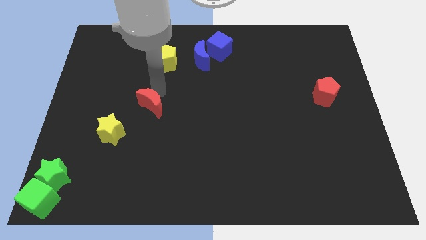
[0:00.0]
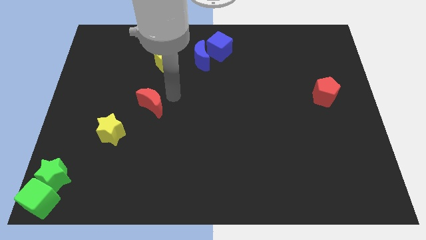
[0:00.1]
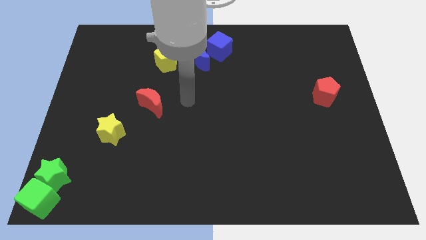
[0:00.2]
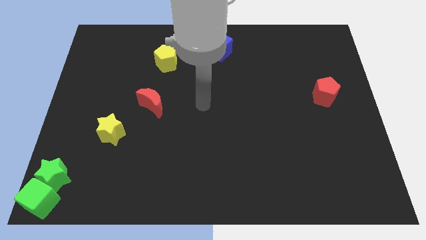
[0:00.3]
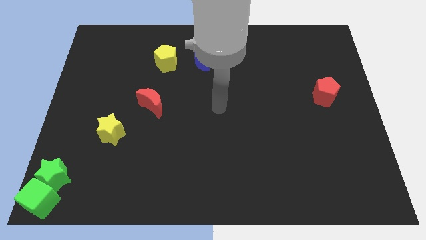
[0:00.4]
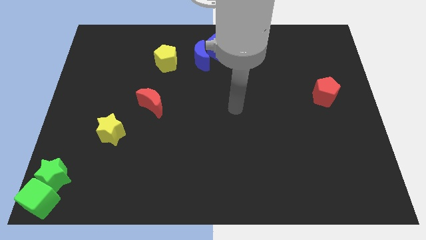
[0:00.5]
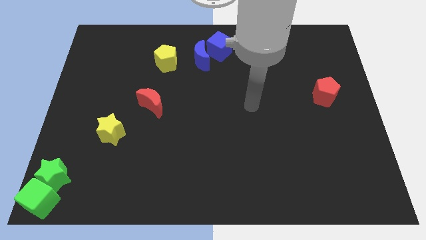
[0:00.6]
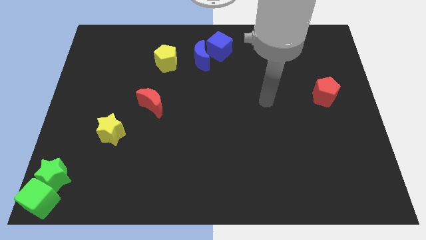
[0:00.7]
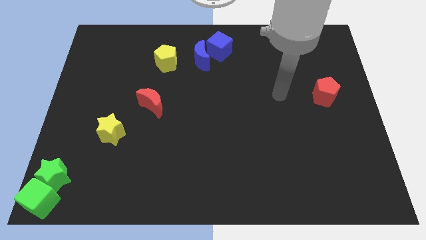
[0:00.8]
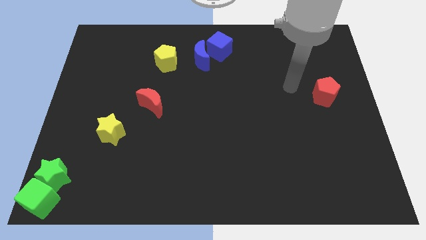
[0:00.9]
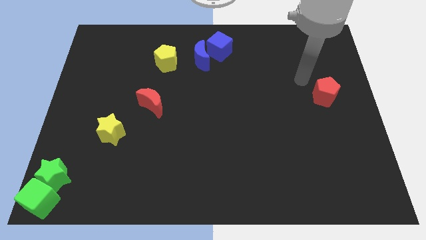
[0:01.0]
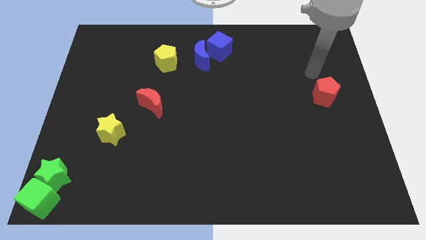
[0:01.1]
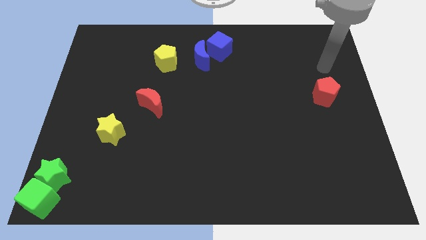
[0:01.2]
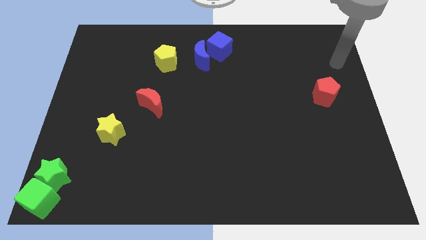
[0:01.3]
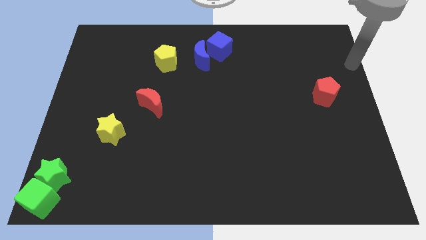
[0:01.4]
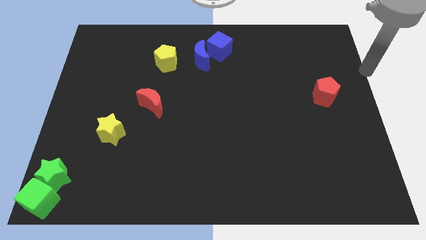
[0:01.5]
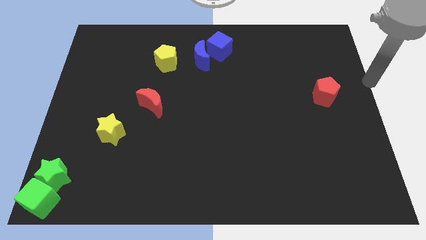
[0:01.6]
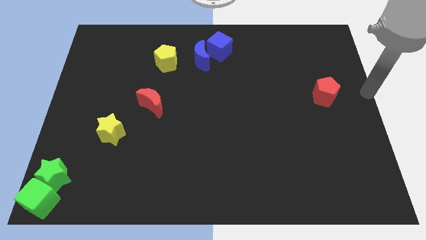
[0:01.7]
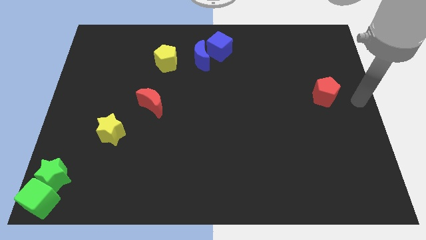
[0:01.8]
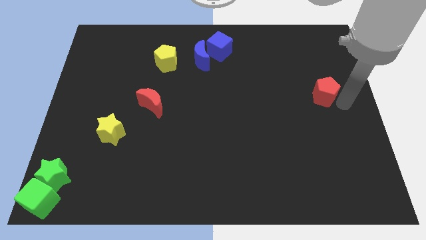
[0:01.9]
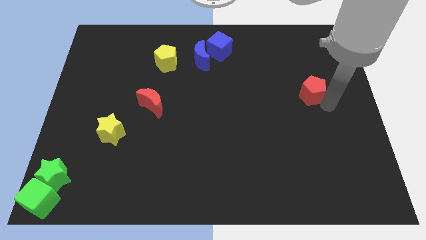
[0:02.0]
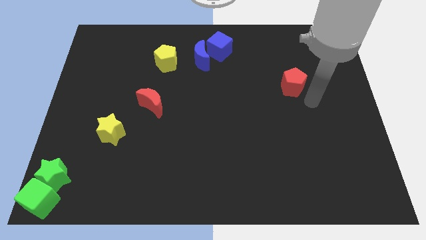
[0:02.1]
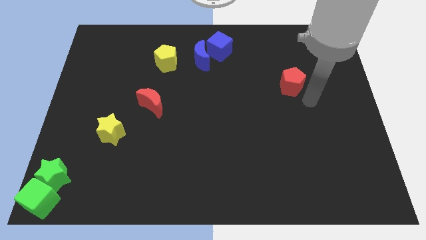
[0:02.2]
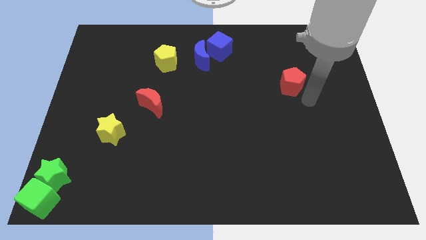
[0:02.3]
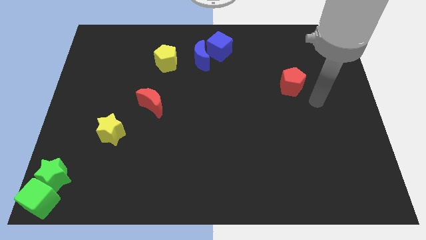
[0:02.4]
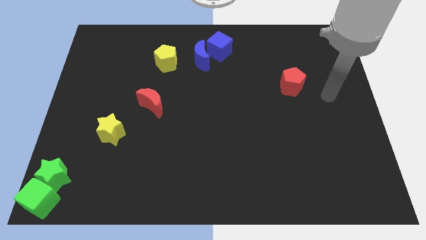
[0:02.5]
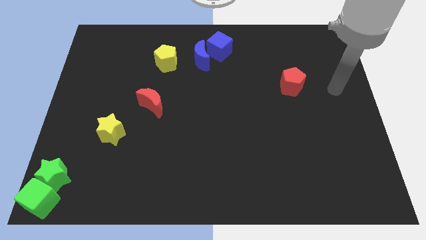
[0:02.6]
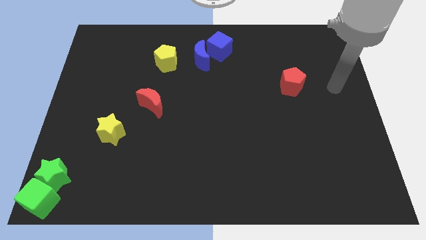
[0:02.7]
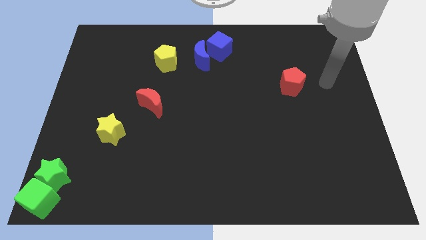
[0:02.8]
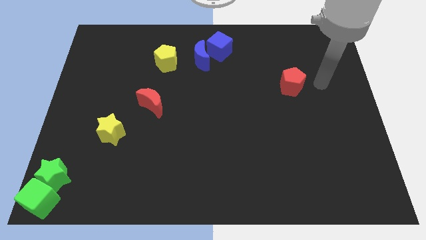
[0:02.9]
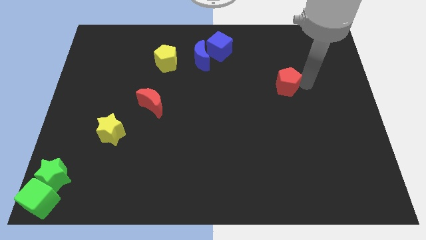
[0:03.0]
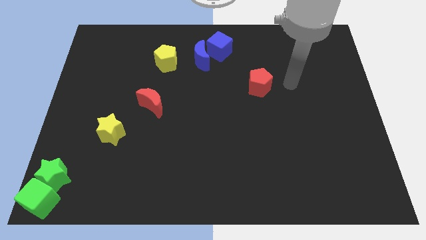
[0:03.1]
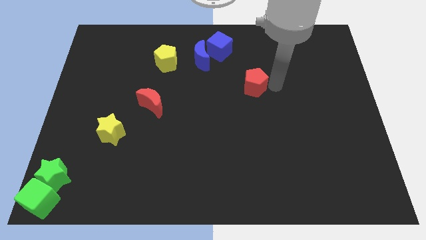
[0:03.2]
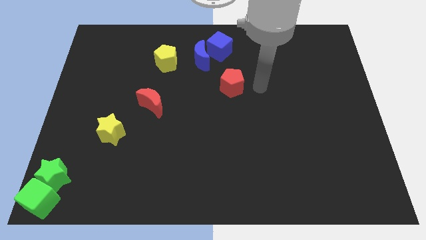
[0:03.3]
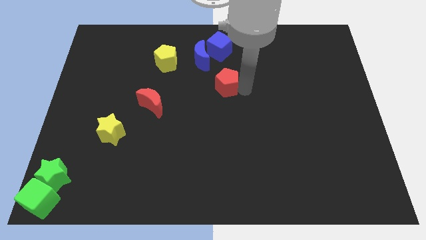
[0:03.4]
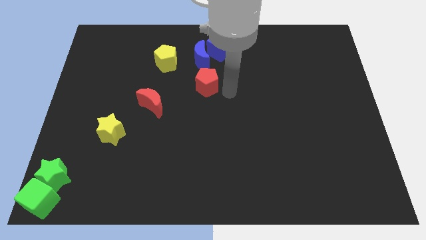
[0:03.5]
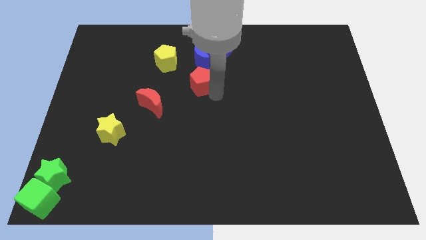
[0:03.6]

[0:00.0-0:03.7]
move the red pentagon to the bottom of the blue crescent

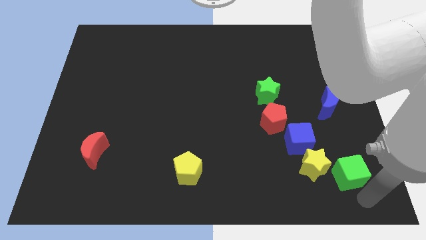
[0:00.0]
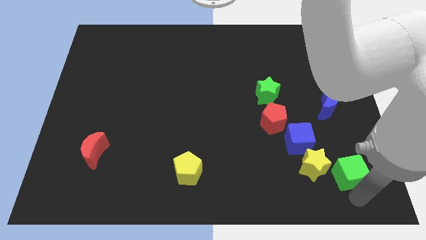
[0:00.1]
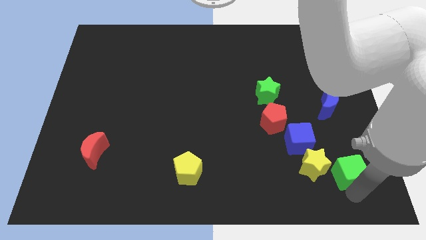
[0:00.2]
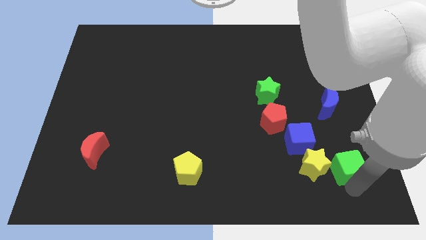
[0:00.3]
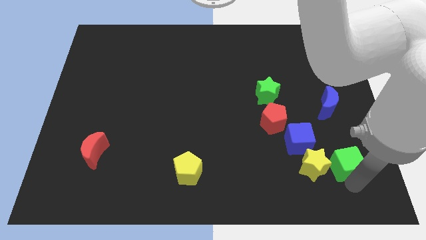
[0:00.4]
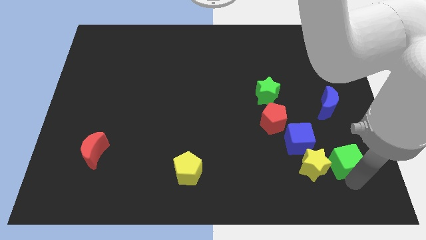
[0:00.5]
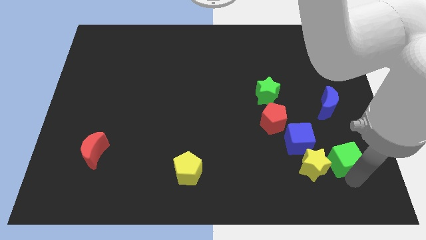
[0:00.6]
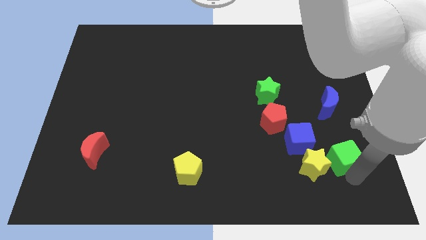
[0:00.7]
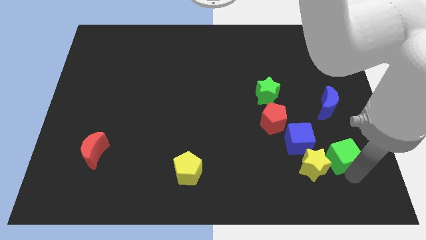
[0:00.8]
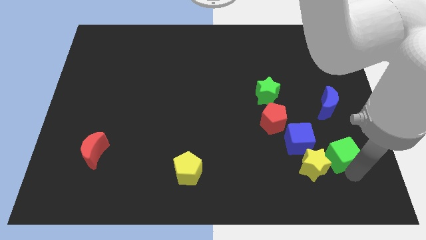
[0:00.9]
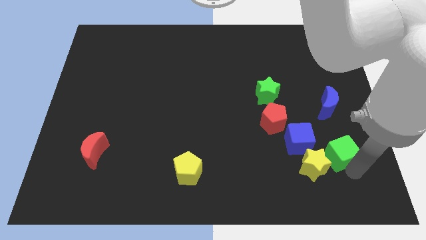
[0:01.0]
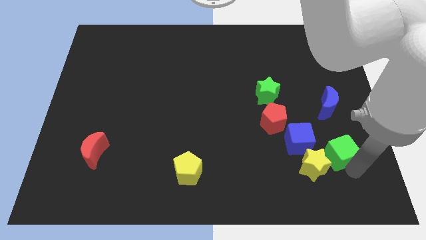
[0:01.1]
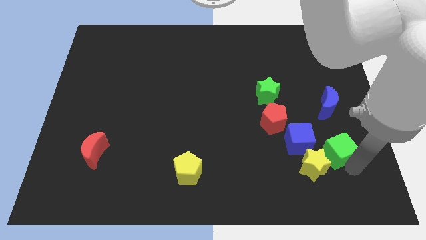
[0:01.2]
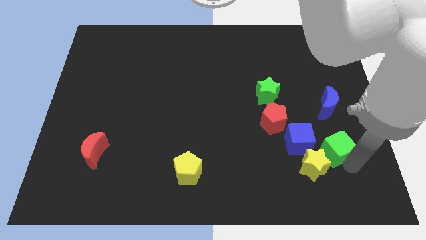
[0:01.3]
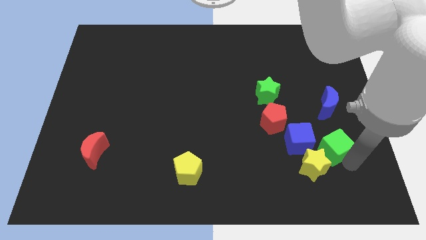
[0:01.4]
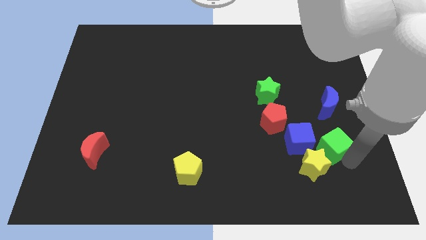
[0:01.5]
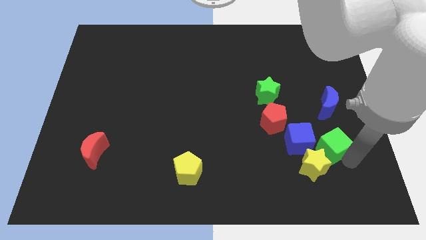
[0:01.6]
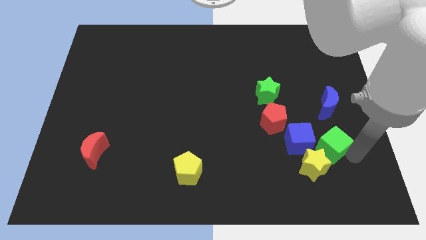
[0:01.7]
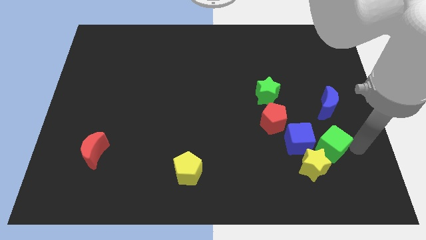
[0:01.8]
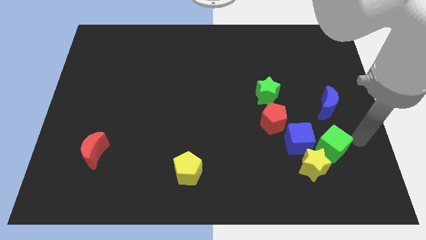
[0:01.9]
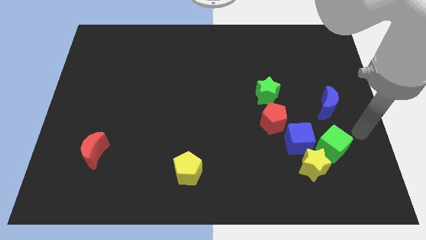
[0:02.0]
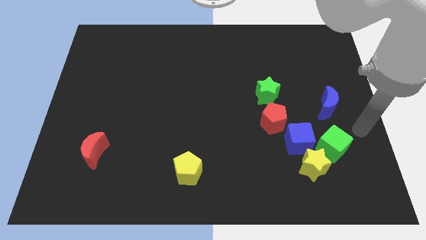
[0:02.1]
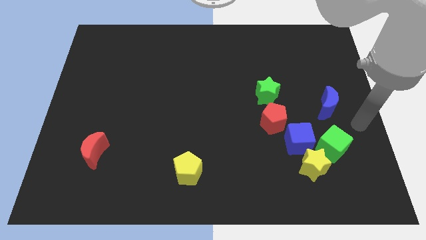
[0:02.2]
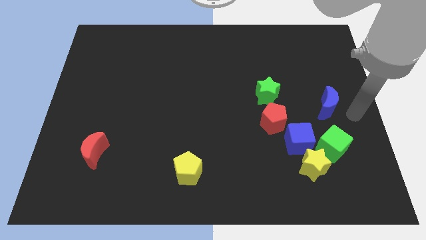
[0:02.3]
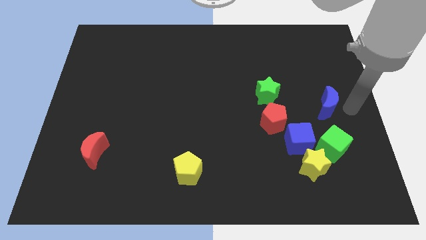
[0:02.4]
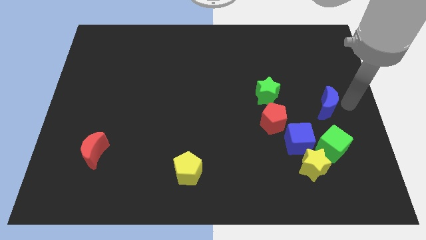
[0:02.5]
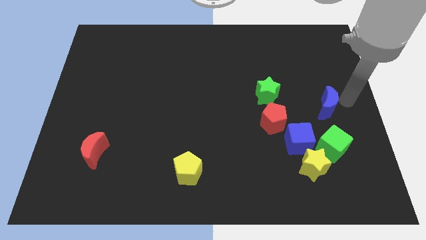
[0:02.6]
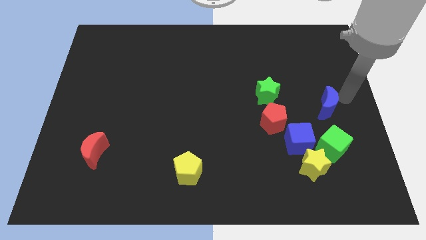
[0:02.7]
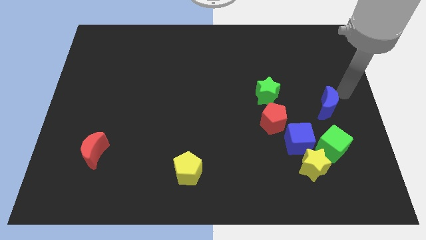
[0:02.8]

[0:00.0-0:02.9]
move the green cube close to the blue cube

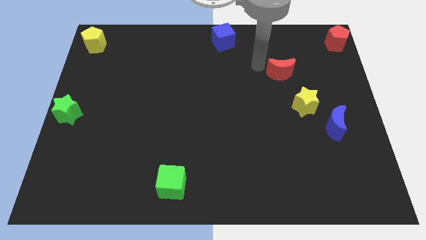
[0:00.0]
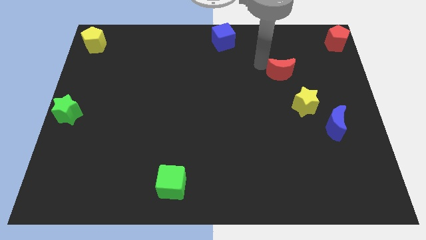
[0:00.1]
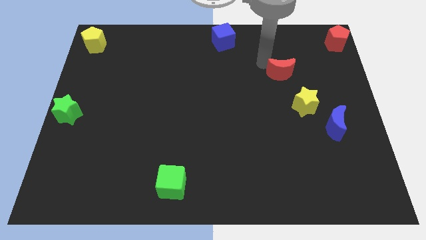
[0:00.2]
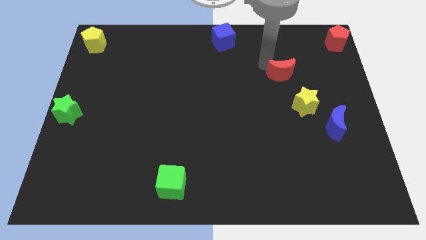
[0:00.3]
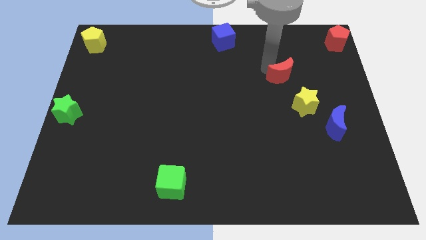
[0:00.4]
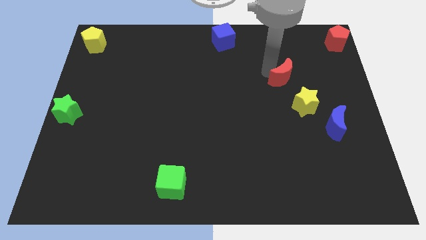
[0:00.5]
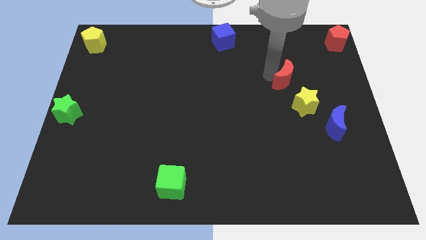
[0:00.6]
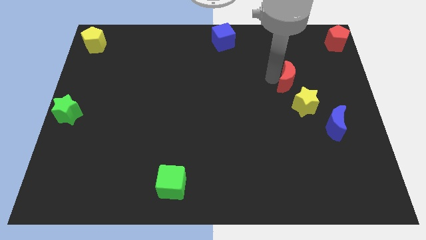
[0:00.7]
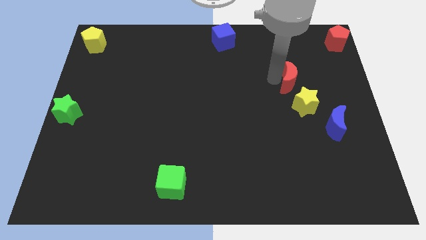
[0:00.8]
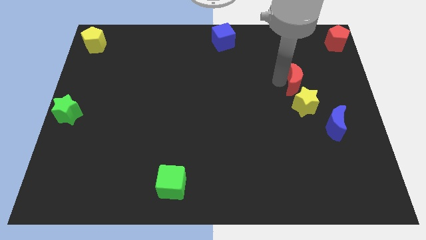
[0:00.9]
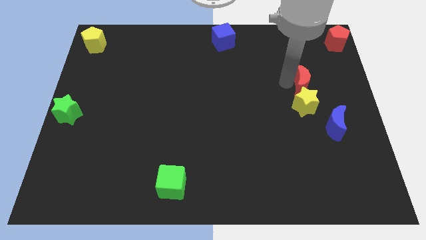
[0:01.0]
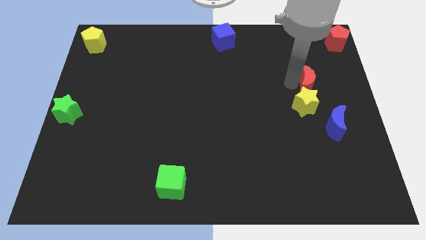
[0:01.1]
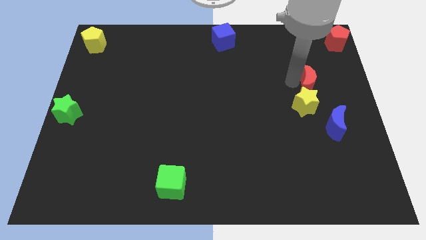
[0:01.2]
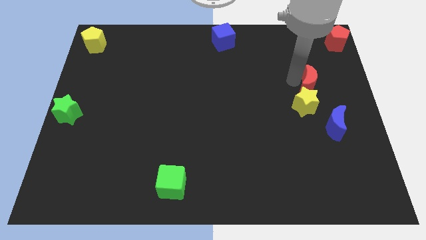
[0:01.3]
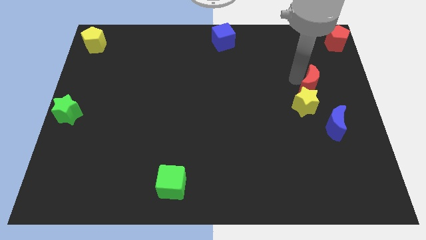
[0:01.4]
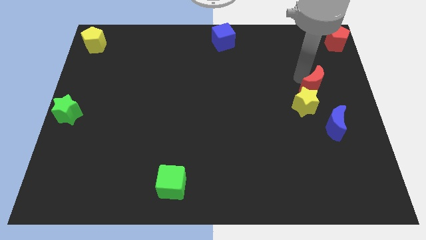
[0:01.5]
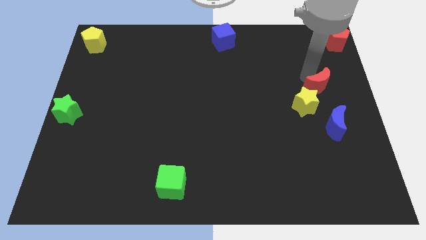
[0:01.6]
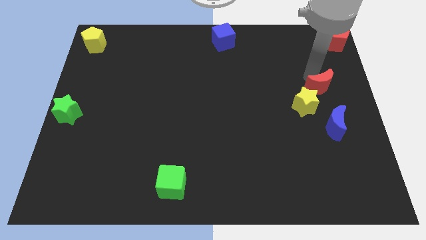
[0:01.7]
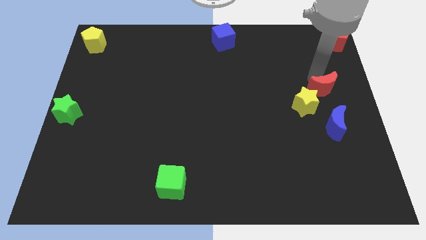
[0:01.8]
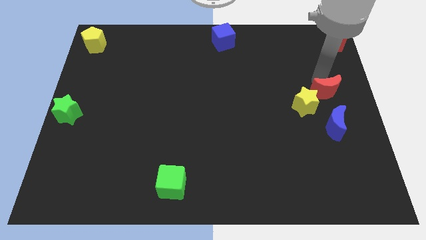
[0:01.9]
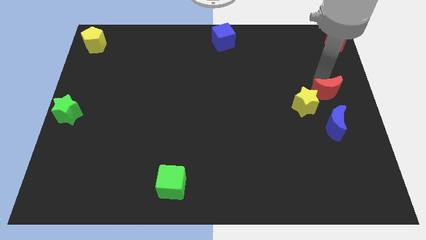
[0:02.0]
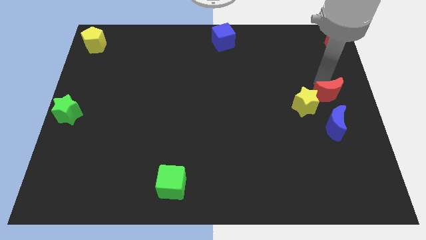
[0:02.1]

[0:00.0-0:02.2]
move the red moon above the yellow star
